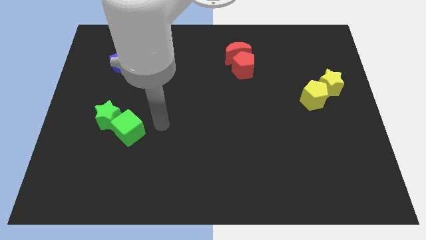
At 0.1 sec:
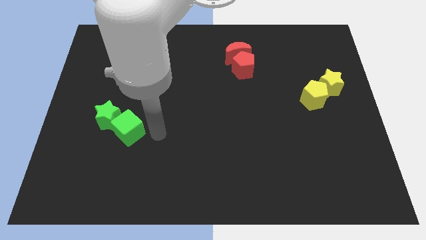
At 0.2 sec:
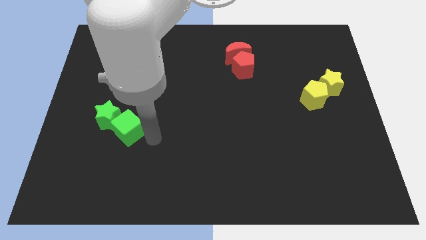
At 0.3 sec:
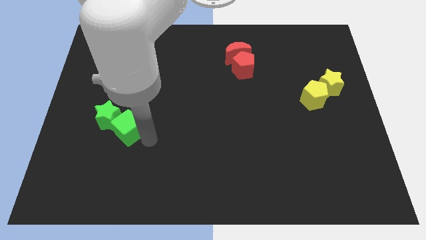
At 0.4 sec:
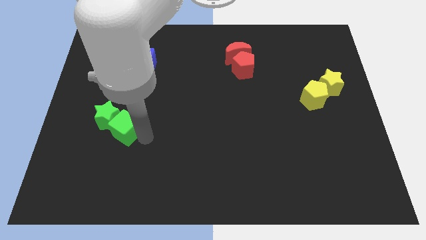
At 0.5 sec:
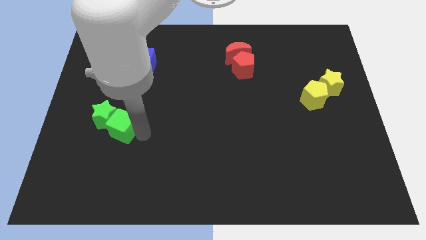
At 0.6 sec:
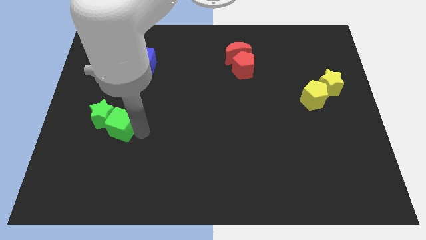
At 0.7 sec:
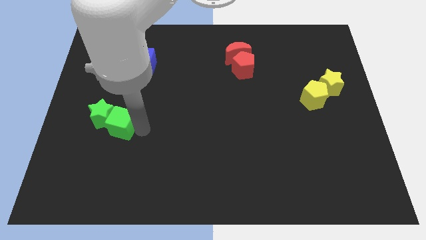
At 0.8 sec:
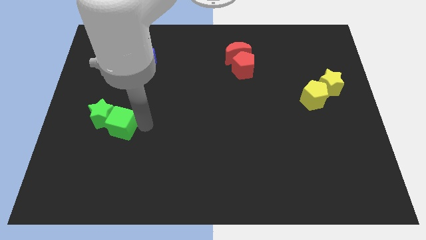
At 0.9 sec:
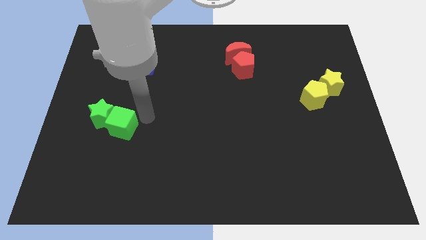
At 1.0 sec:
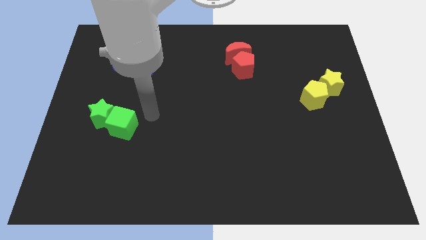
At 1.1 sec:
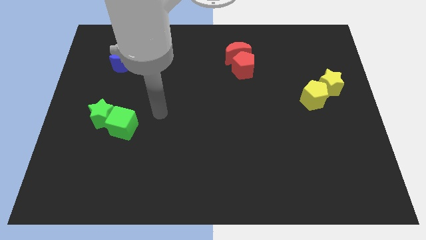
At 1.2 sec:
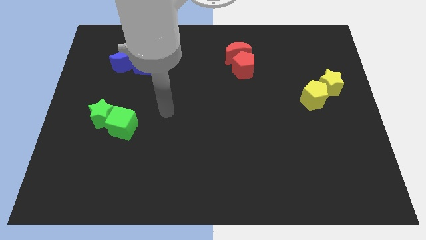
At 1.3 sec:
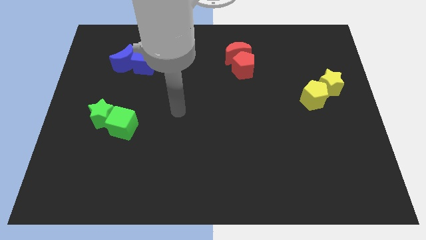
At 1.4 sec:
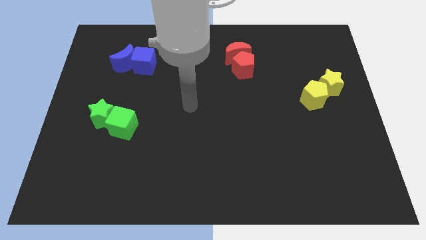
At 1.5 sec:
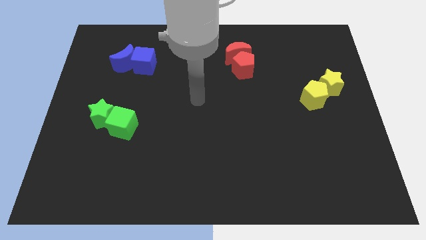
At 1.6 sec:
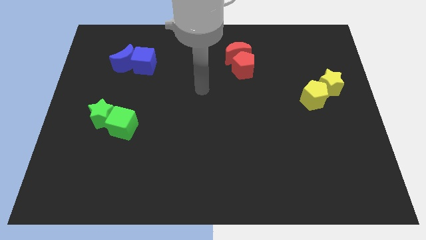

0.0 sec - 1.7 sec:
move your arm away from the green cube

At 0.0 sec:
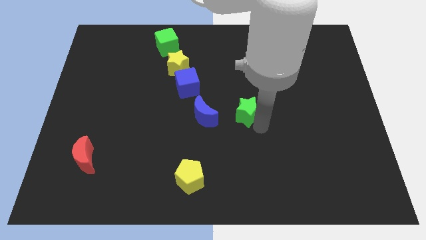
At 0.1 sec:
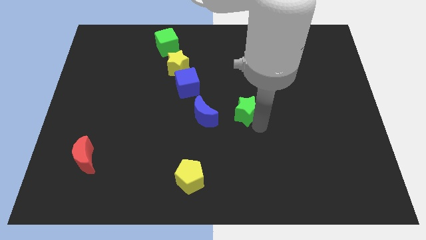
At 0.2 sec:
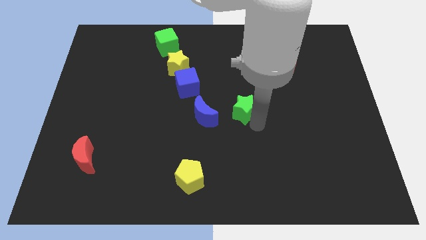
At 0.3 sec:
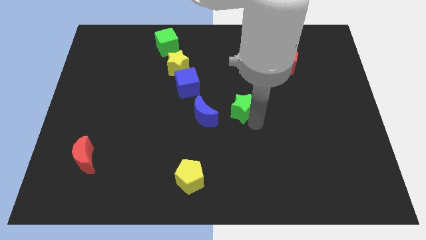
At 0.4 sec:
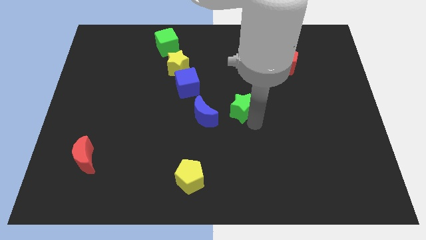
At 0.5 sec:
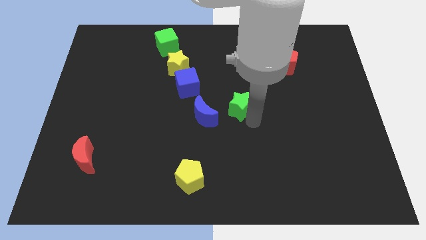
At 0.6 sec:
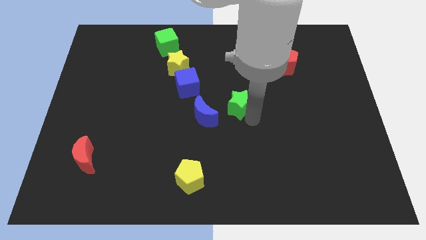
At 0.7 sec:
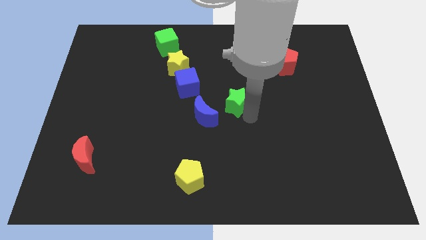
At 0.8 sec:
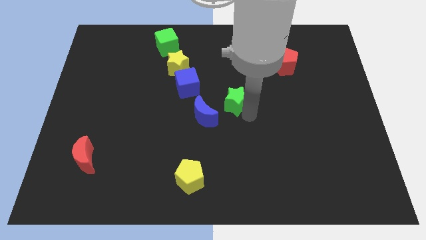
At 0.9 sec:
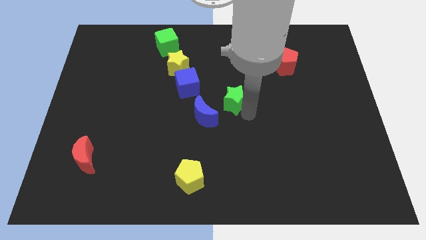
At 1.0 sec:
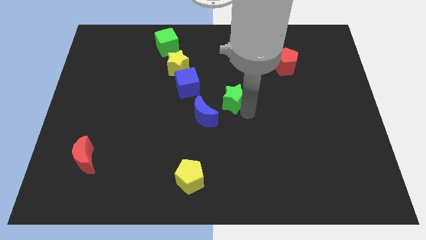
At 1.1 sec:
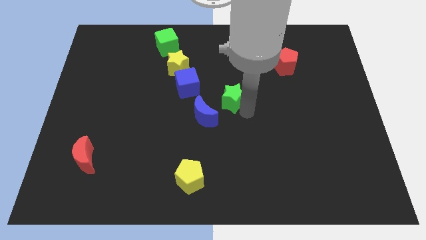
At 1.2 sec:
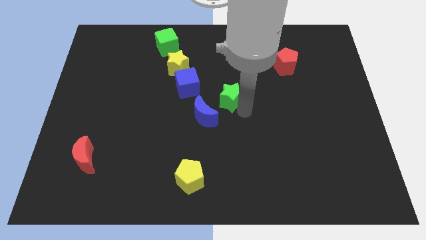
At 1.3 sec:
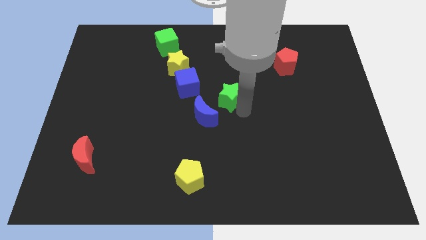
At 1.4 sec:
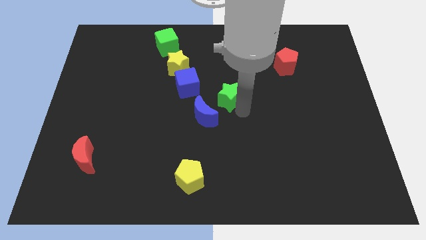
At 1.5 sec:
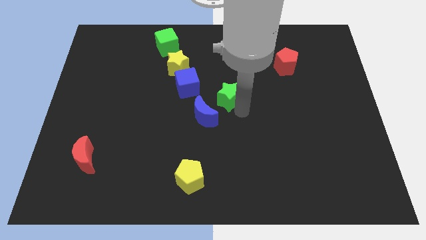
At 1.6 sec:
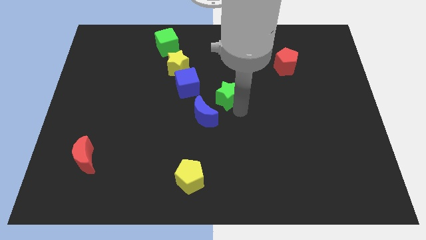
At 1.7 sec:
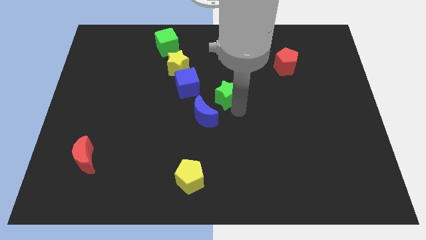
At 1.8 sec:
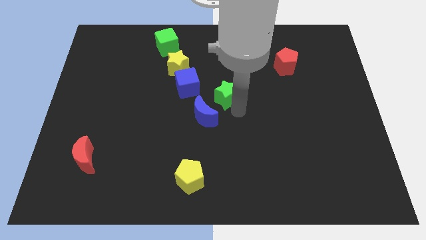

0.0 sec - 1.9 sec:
push the green star to the right of the blue cube

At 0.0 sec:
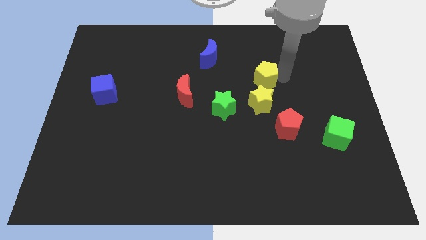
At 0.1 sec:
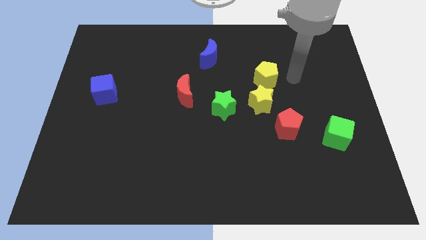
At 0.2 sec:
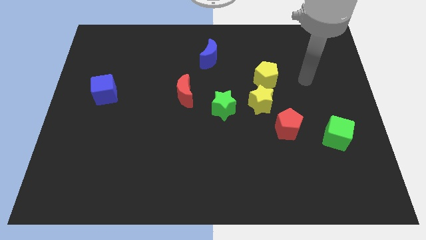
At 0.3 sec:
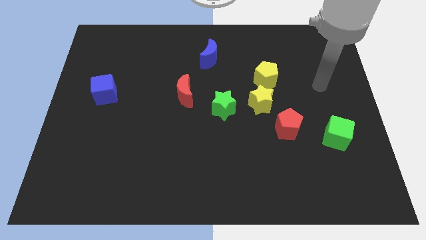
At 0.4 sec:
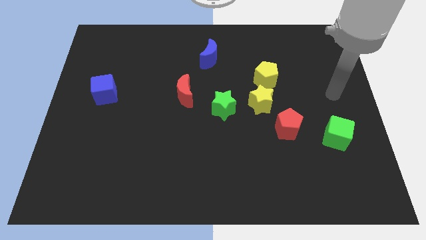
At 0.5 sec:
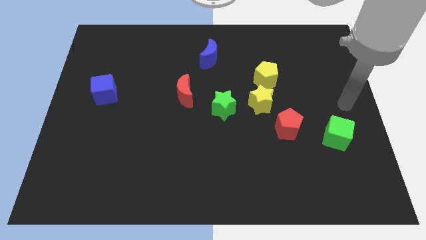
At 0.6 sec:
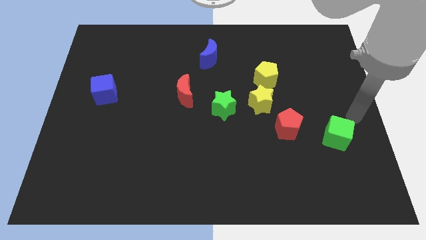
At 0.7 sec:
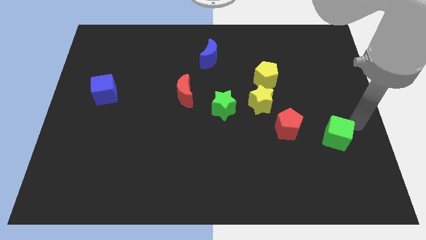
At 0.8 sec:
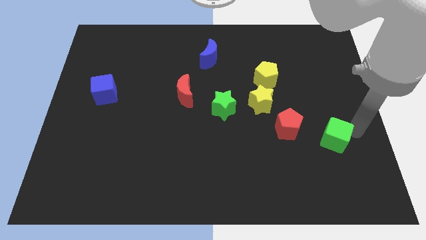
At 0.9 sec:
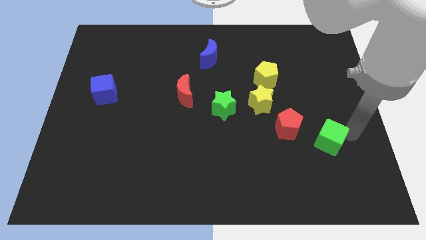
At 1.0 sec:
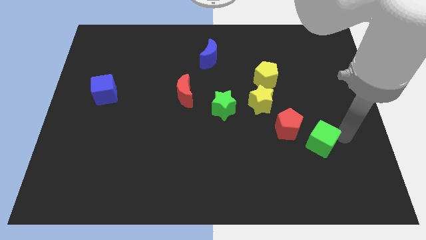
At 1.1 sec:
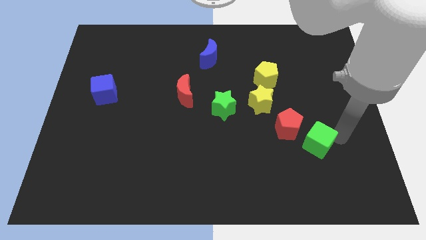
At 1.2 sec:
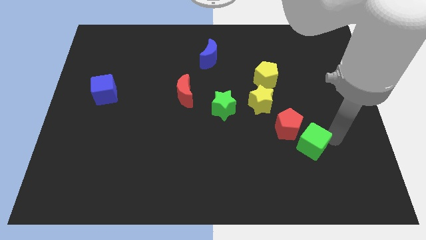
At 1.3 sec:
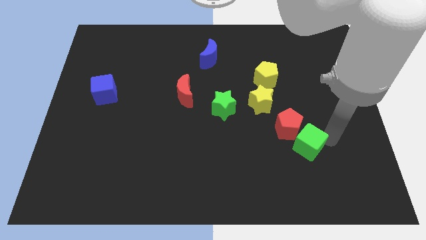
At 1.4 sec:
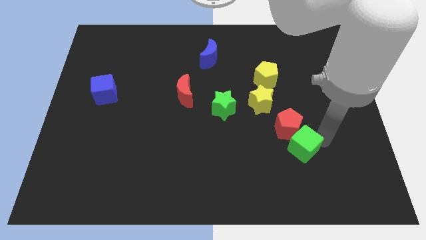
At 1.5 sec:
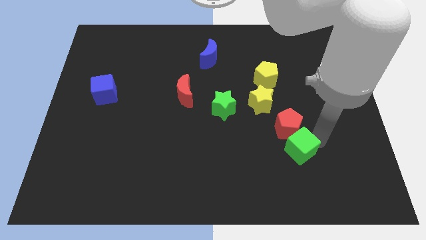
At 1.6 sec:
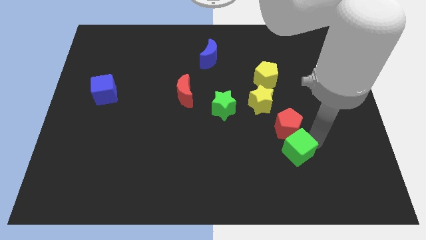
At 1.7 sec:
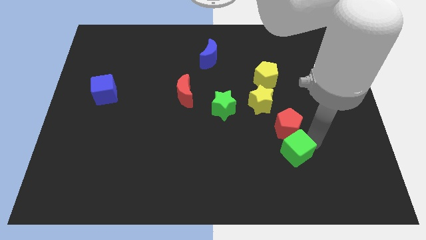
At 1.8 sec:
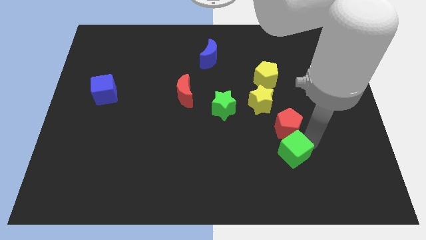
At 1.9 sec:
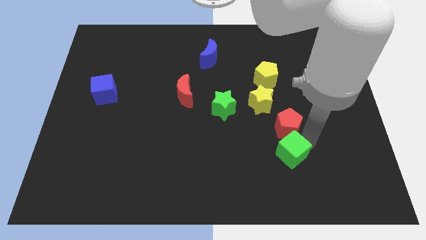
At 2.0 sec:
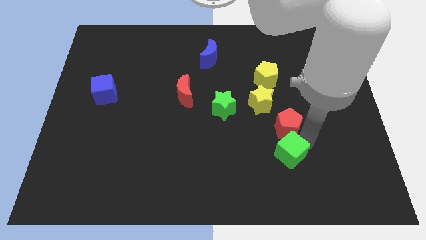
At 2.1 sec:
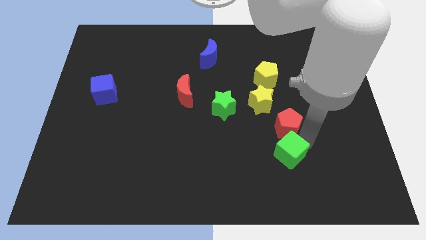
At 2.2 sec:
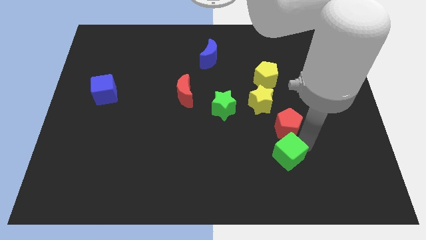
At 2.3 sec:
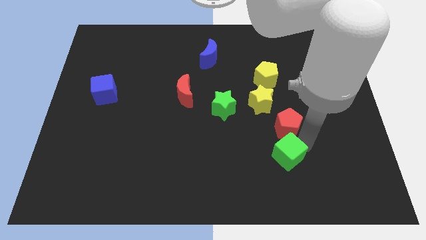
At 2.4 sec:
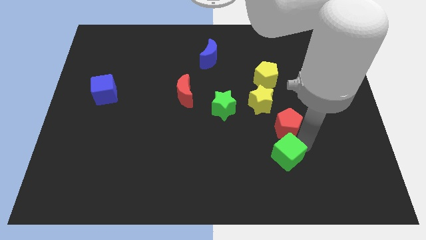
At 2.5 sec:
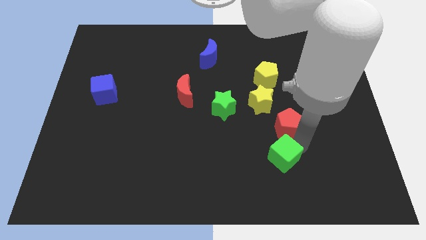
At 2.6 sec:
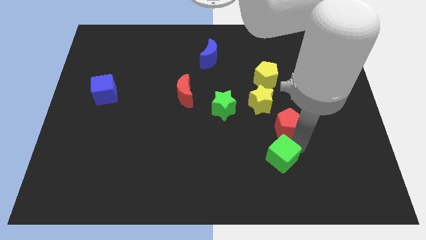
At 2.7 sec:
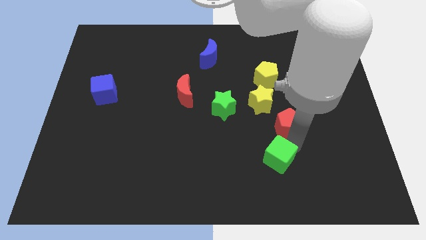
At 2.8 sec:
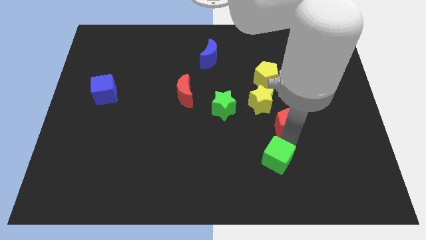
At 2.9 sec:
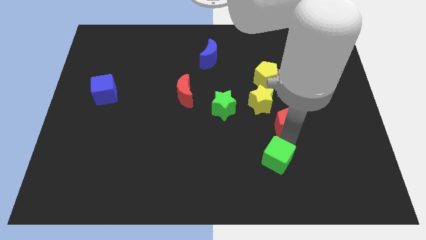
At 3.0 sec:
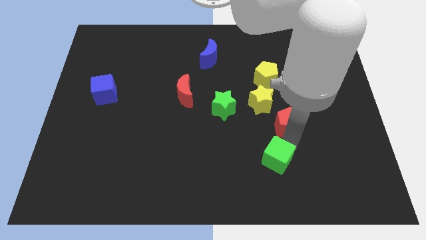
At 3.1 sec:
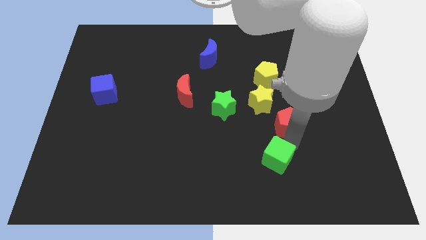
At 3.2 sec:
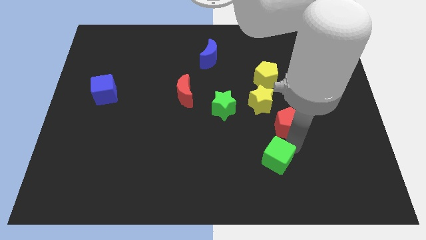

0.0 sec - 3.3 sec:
place the green cube below the red pentagon

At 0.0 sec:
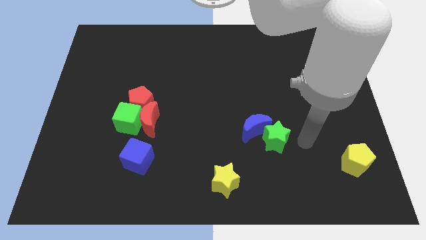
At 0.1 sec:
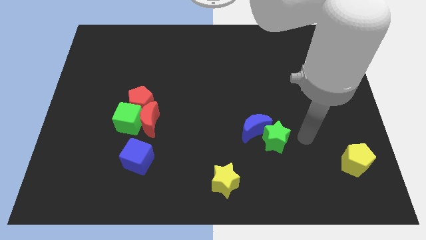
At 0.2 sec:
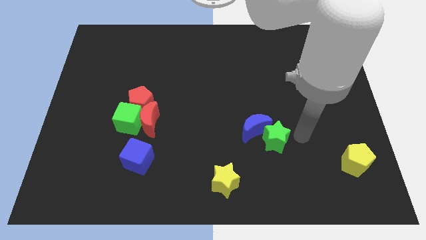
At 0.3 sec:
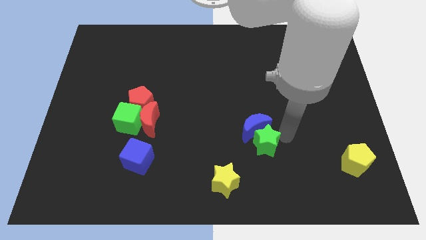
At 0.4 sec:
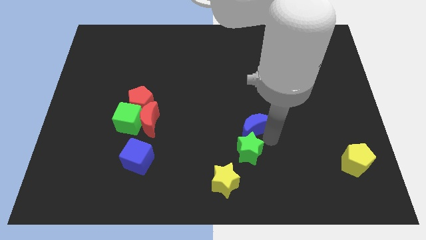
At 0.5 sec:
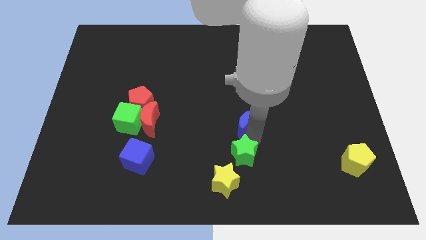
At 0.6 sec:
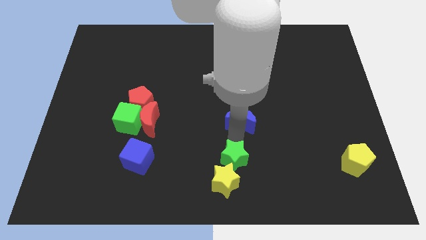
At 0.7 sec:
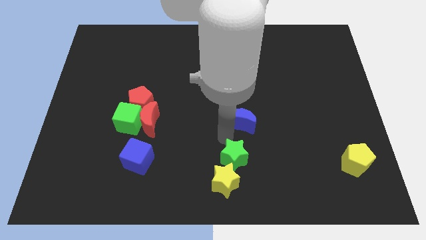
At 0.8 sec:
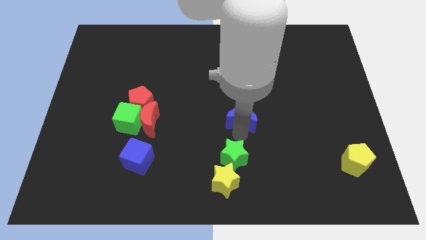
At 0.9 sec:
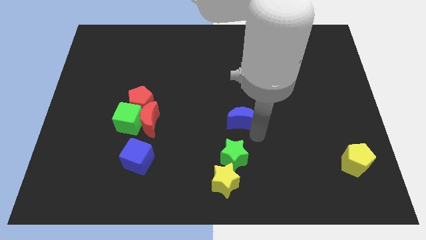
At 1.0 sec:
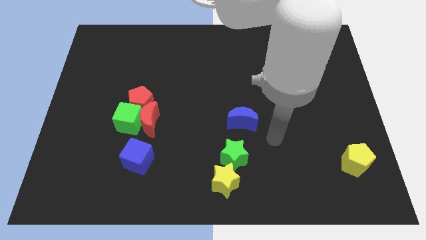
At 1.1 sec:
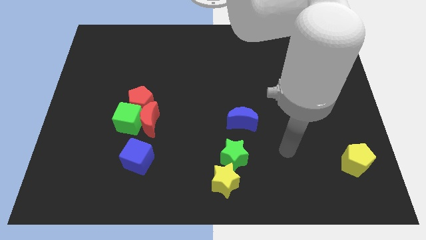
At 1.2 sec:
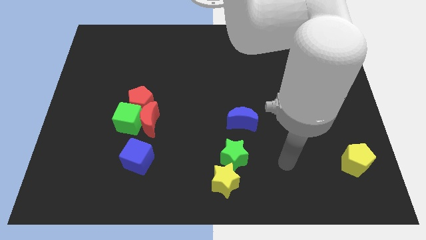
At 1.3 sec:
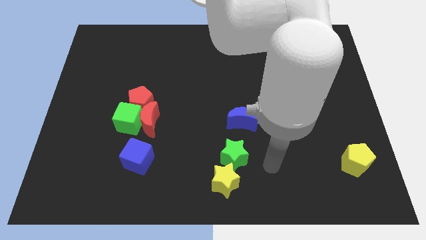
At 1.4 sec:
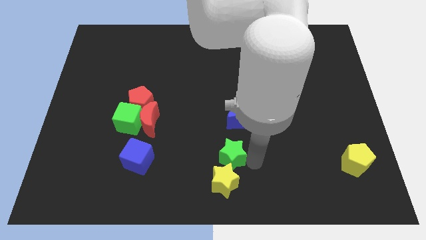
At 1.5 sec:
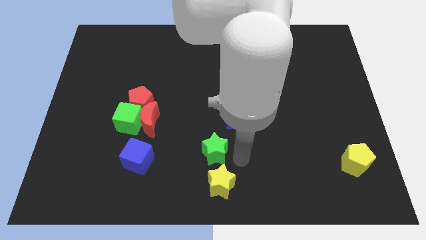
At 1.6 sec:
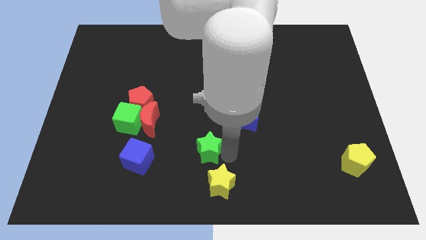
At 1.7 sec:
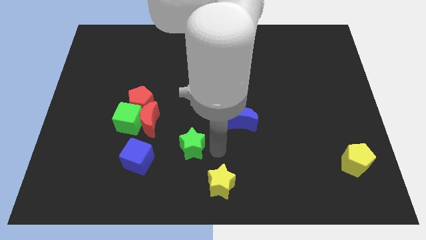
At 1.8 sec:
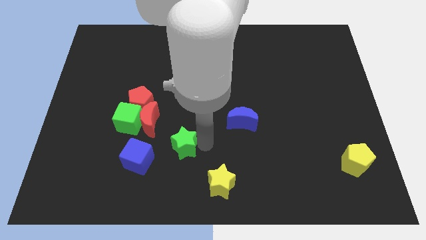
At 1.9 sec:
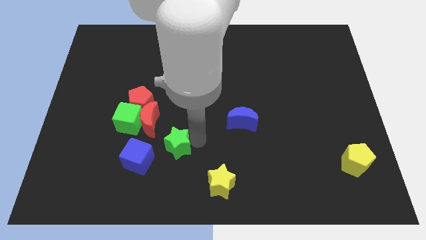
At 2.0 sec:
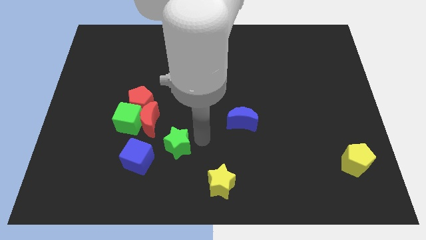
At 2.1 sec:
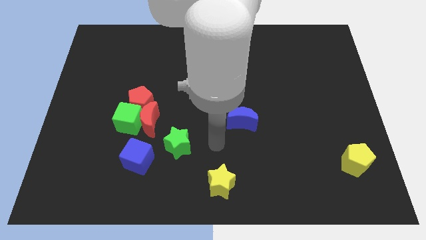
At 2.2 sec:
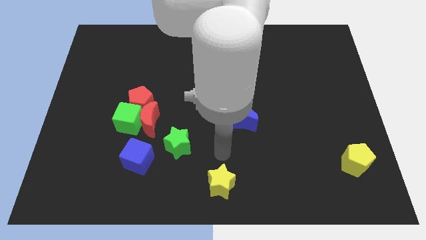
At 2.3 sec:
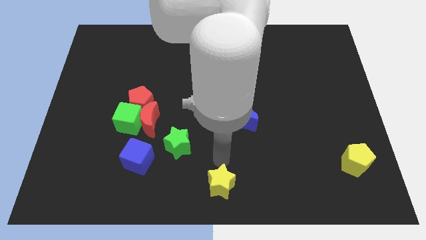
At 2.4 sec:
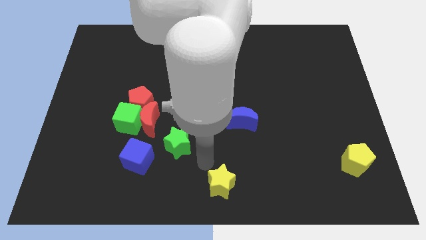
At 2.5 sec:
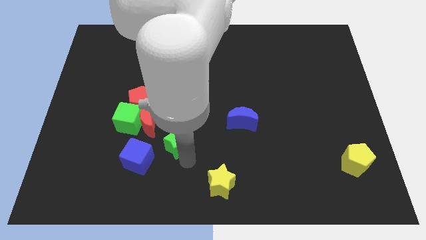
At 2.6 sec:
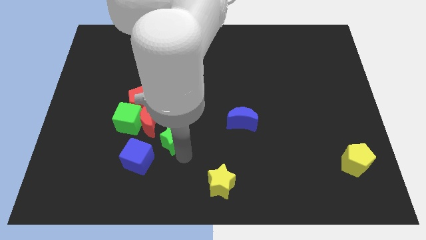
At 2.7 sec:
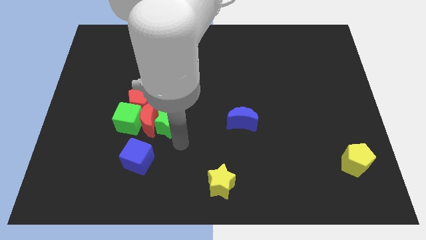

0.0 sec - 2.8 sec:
push the green star right to the red crescent
